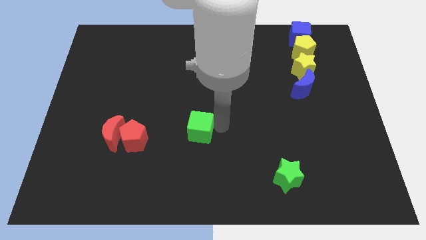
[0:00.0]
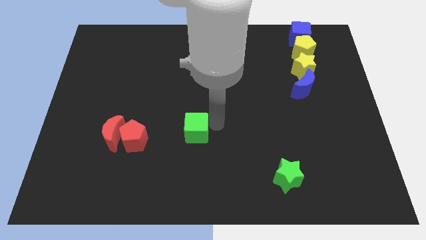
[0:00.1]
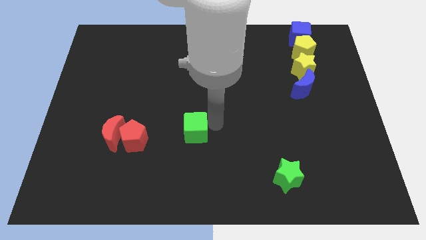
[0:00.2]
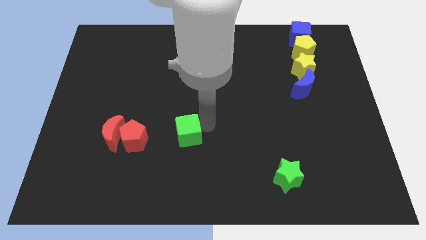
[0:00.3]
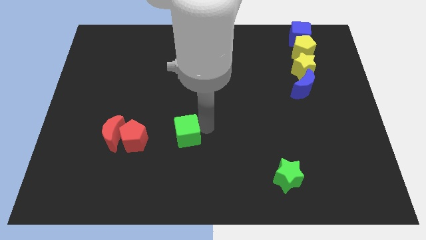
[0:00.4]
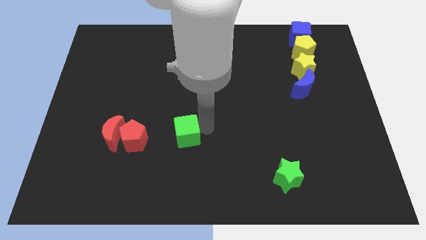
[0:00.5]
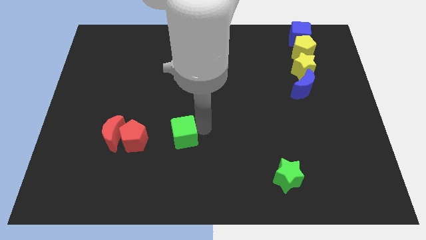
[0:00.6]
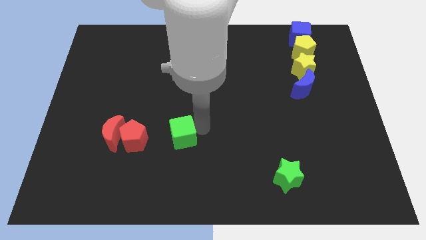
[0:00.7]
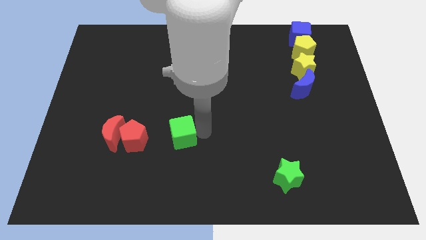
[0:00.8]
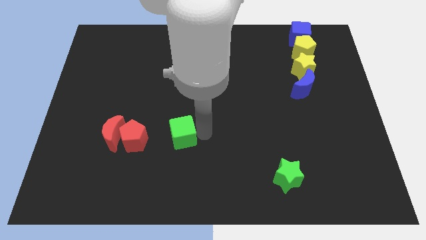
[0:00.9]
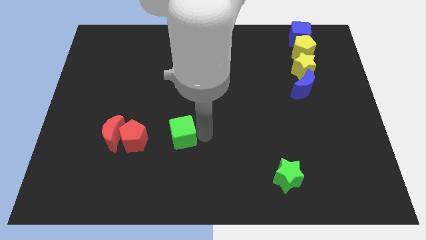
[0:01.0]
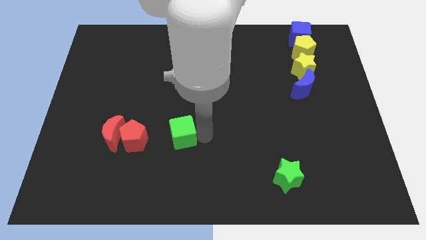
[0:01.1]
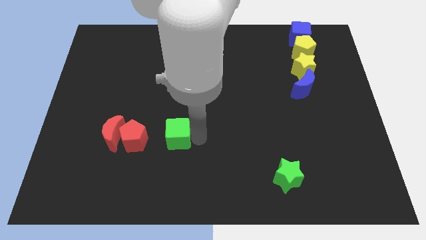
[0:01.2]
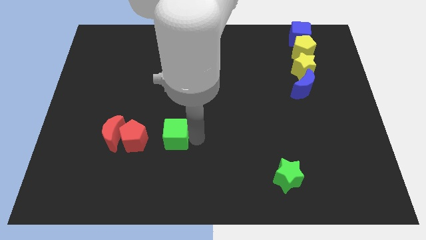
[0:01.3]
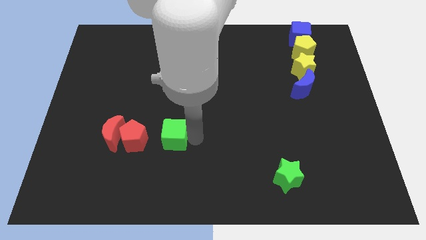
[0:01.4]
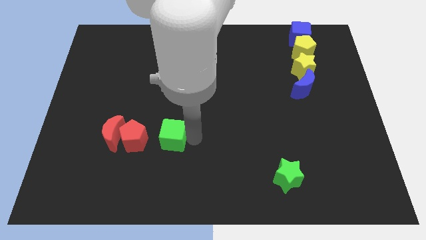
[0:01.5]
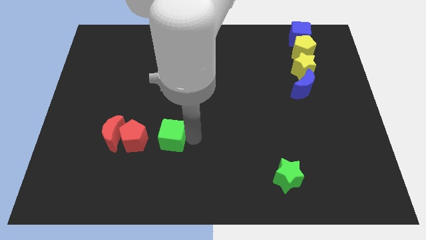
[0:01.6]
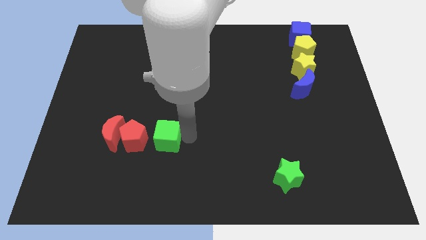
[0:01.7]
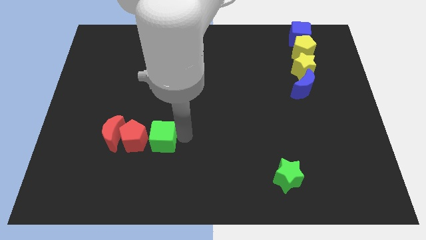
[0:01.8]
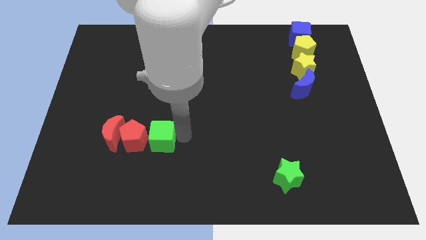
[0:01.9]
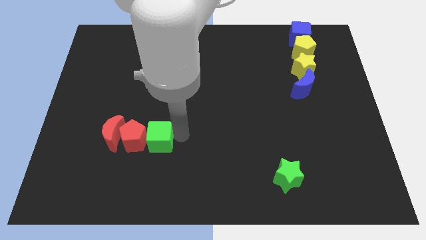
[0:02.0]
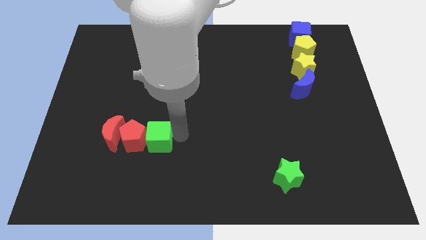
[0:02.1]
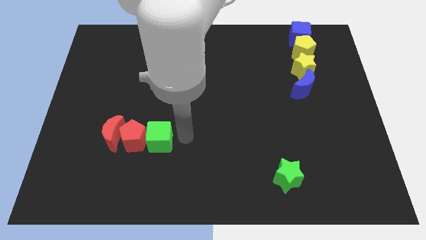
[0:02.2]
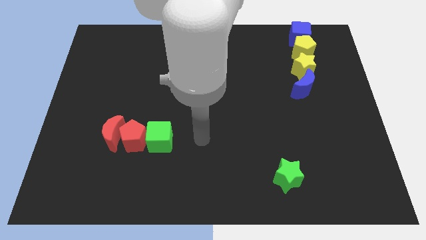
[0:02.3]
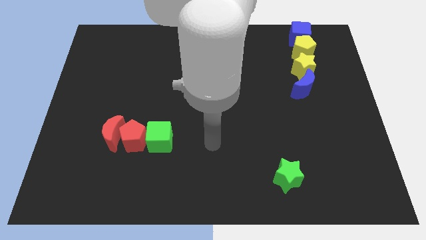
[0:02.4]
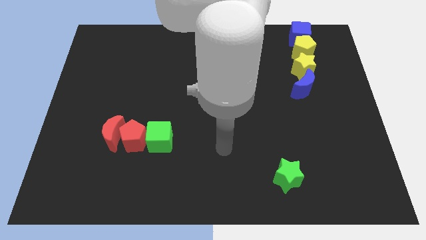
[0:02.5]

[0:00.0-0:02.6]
put the green cube and the red pentagon together

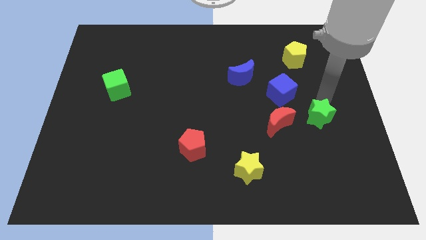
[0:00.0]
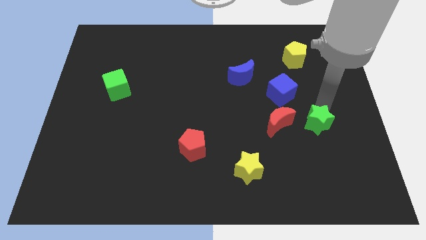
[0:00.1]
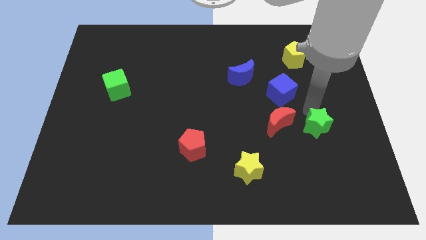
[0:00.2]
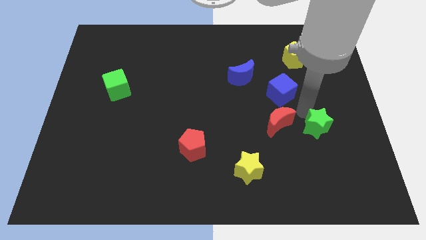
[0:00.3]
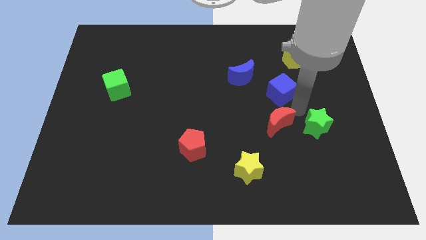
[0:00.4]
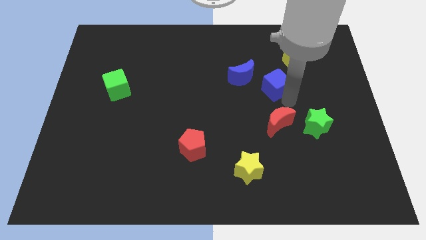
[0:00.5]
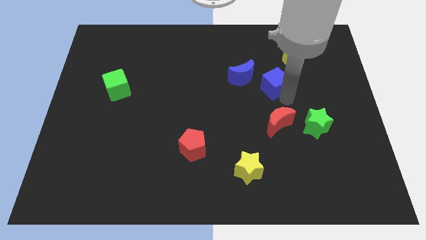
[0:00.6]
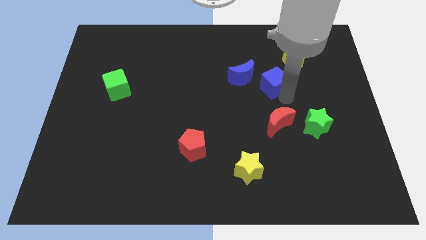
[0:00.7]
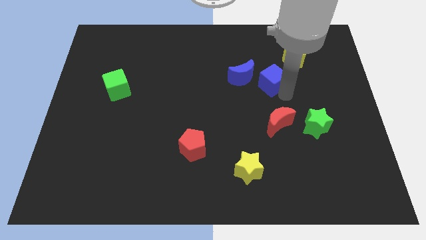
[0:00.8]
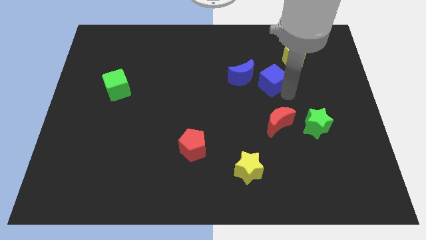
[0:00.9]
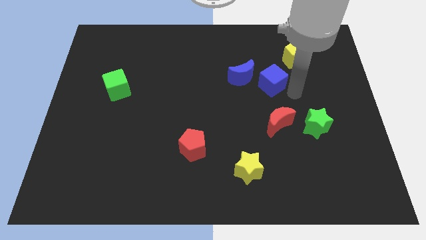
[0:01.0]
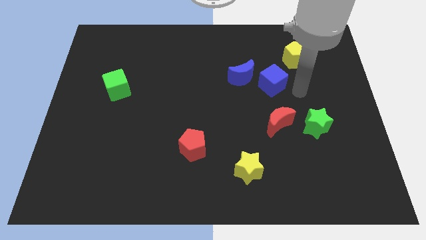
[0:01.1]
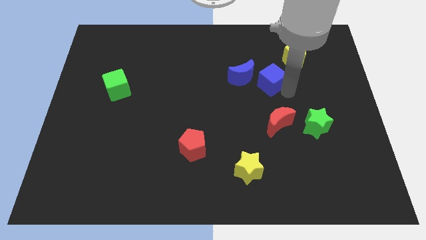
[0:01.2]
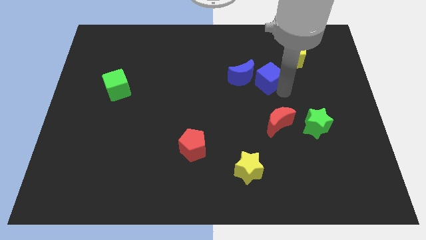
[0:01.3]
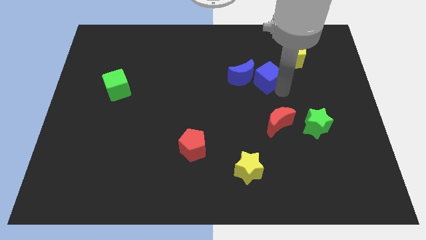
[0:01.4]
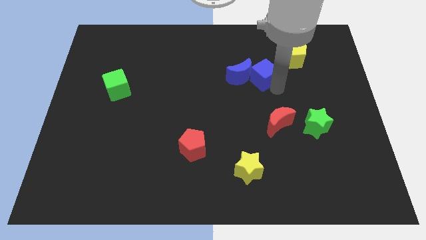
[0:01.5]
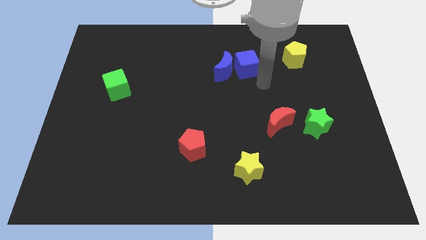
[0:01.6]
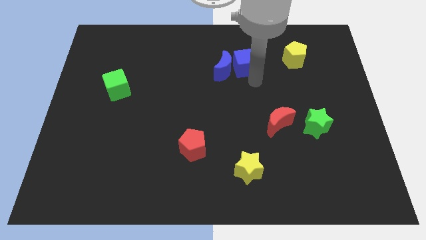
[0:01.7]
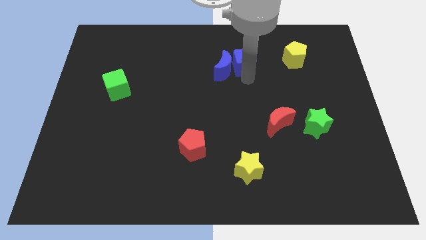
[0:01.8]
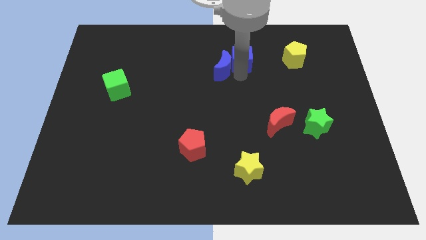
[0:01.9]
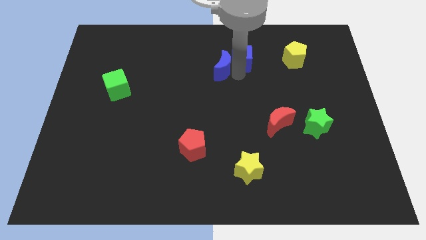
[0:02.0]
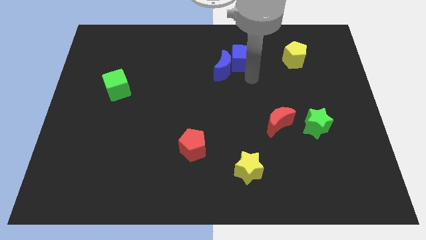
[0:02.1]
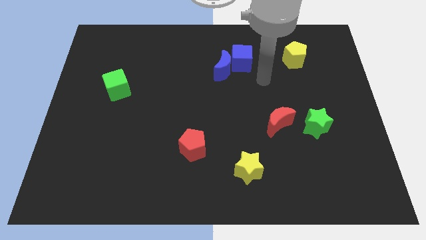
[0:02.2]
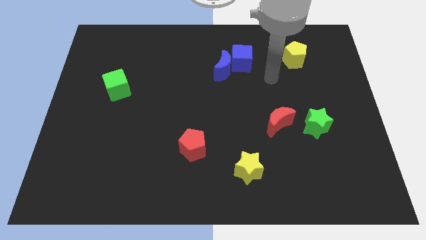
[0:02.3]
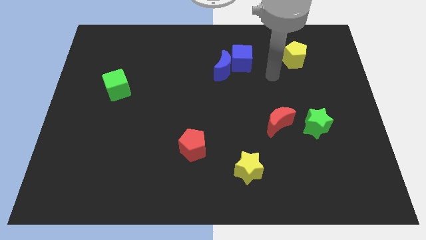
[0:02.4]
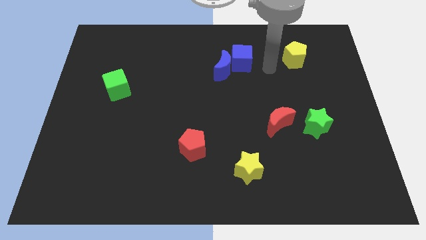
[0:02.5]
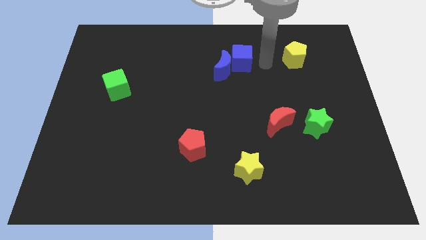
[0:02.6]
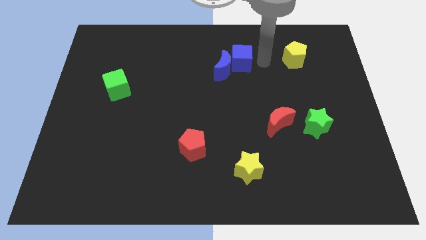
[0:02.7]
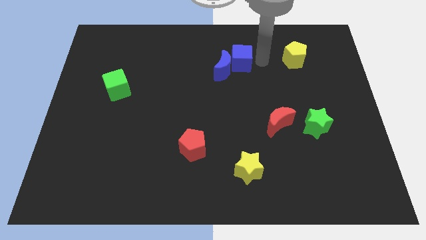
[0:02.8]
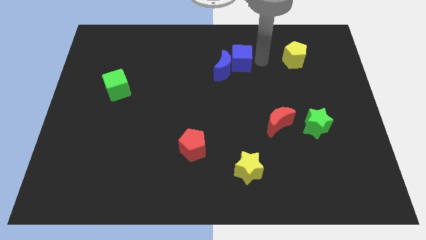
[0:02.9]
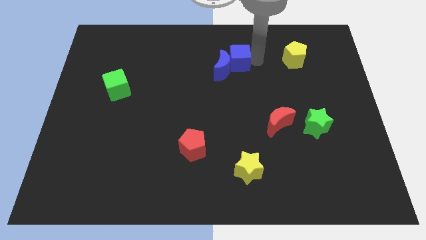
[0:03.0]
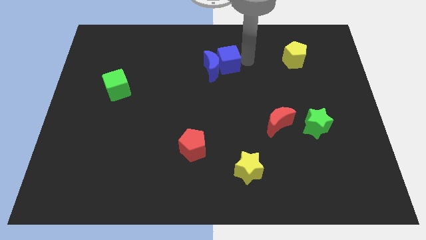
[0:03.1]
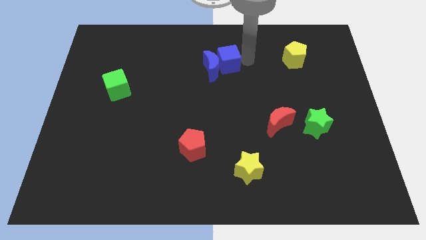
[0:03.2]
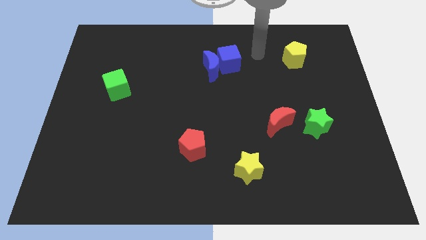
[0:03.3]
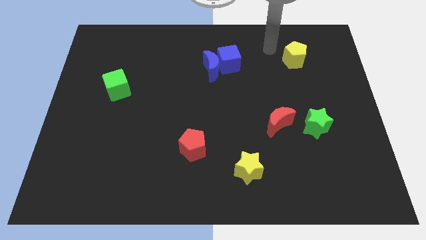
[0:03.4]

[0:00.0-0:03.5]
push the blue cube into the blue crescent

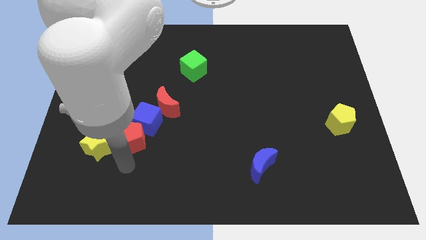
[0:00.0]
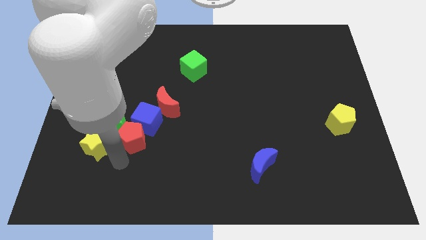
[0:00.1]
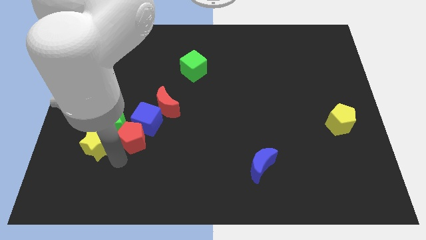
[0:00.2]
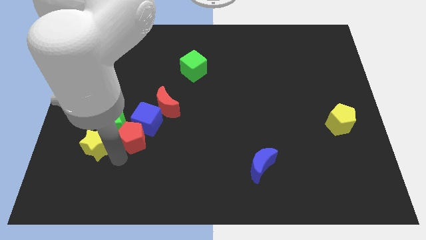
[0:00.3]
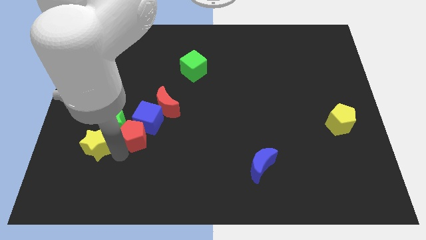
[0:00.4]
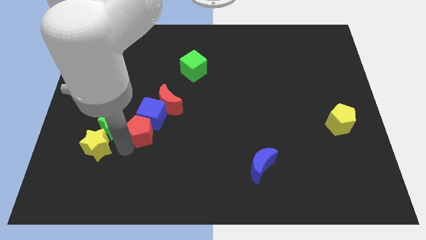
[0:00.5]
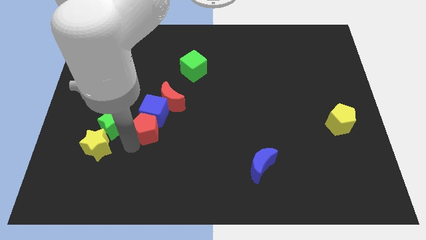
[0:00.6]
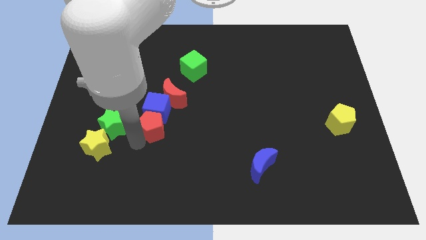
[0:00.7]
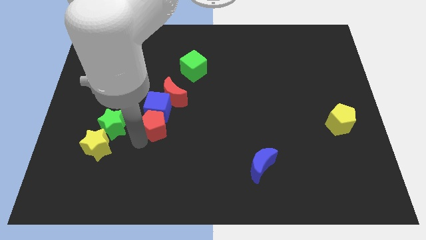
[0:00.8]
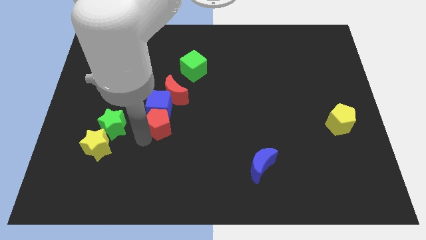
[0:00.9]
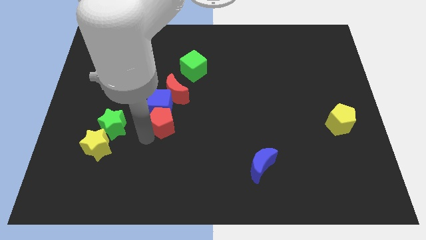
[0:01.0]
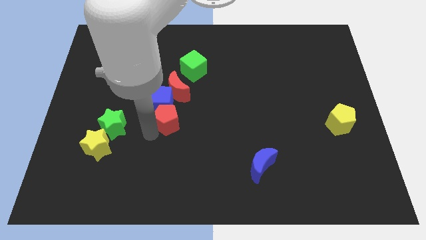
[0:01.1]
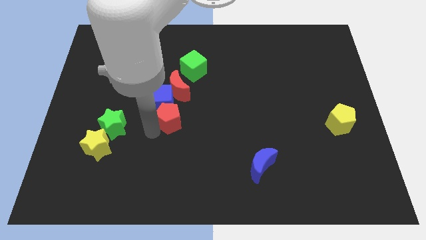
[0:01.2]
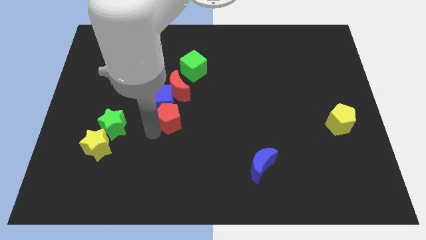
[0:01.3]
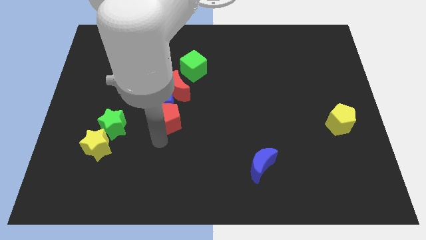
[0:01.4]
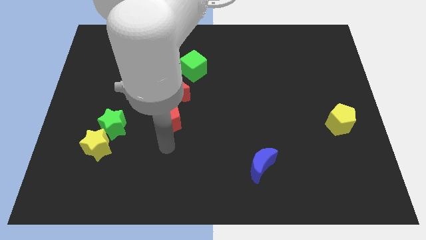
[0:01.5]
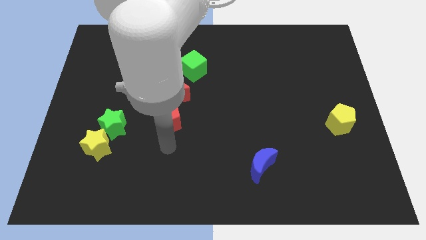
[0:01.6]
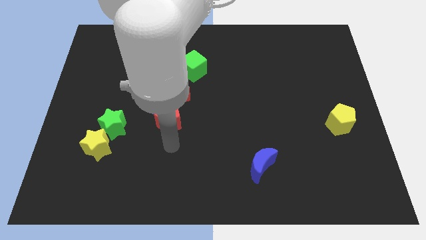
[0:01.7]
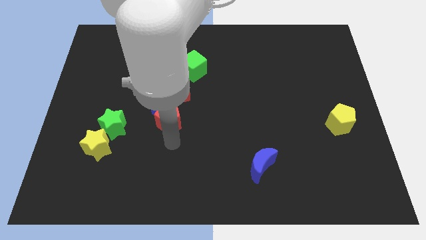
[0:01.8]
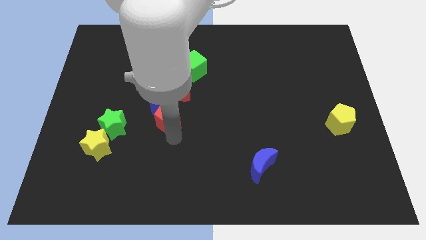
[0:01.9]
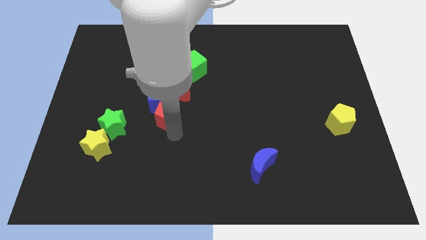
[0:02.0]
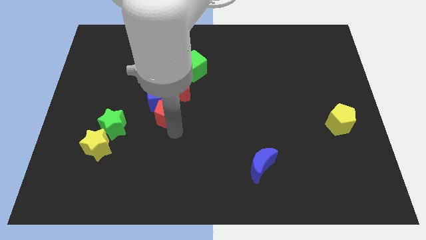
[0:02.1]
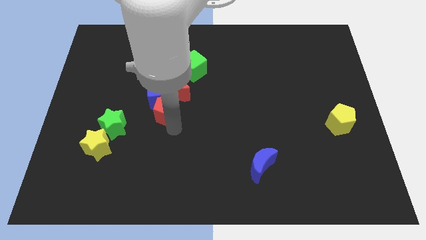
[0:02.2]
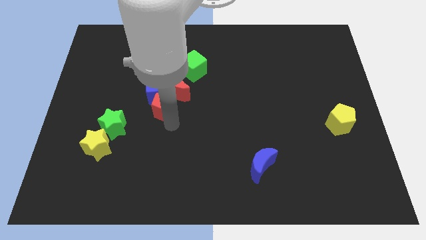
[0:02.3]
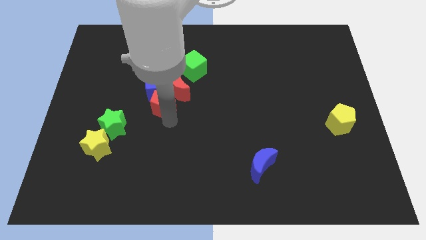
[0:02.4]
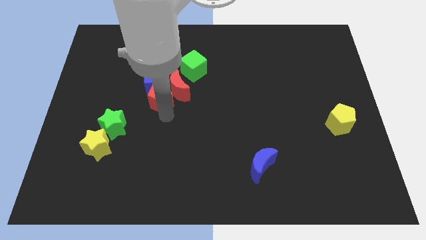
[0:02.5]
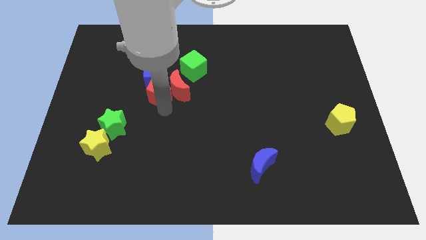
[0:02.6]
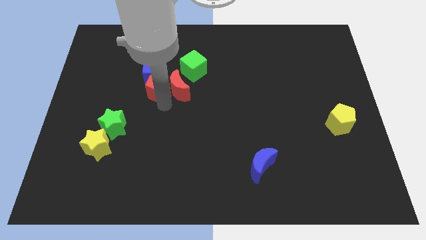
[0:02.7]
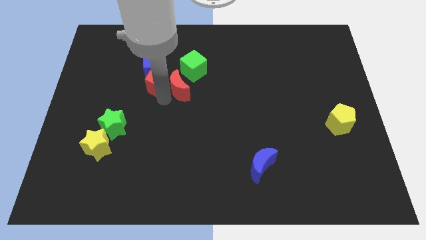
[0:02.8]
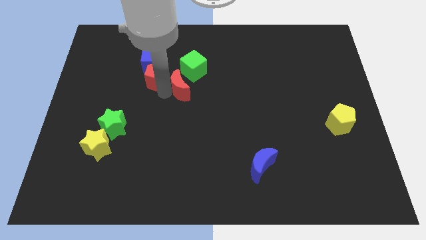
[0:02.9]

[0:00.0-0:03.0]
push the blue cube along with red pentagon to top
